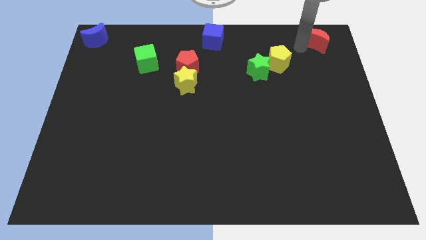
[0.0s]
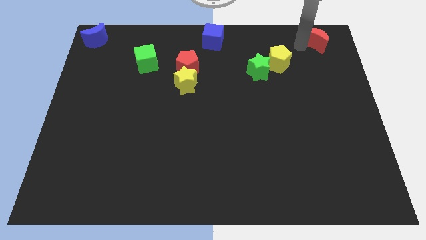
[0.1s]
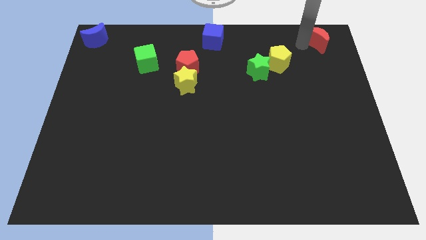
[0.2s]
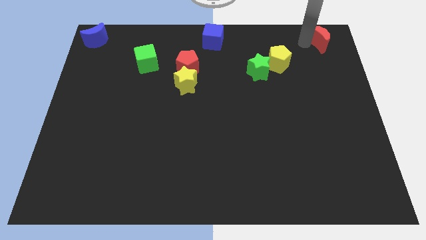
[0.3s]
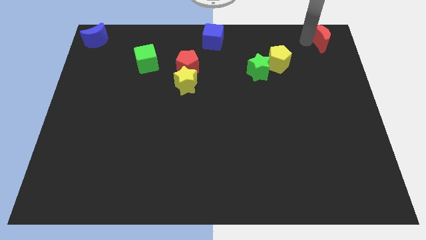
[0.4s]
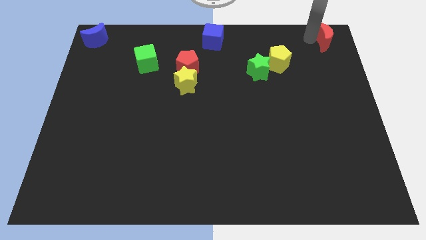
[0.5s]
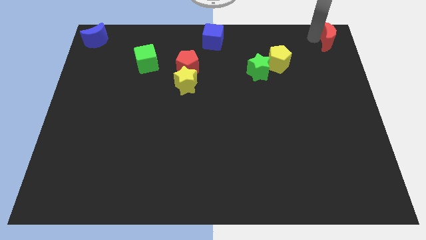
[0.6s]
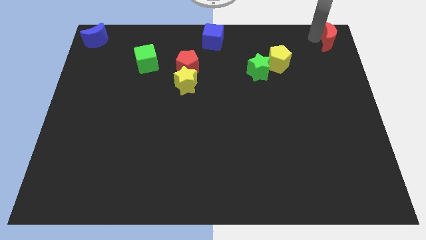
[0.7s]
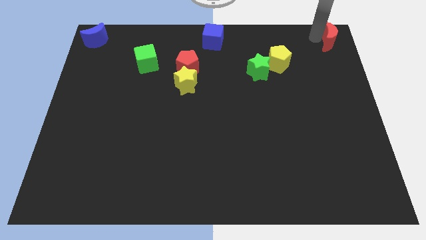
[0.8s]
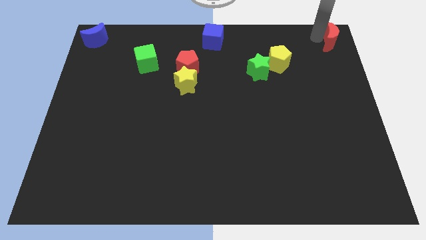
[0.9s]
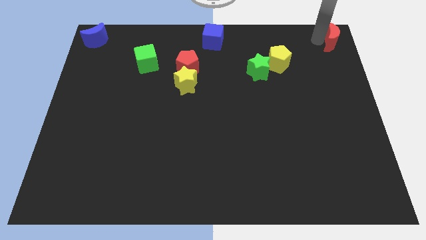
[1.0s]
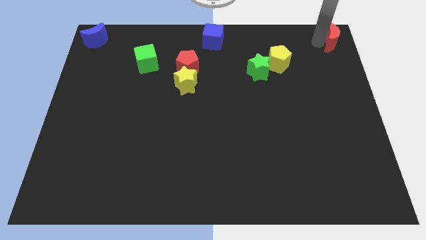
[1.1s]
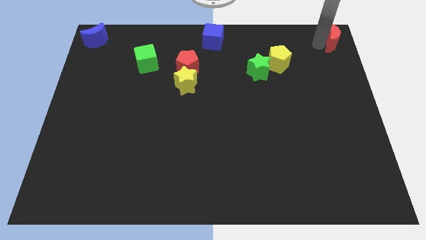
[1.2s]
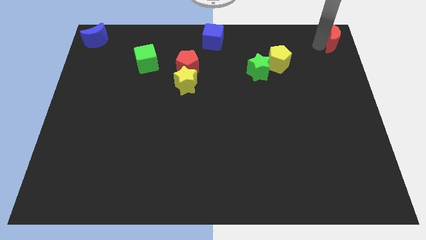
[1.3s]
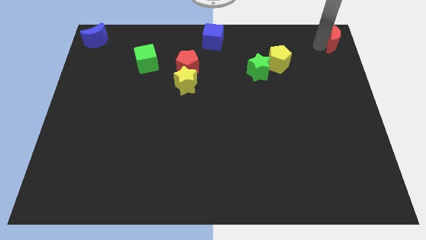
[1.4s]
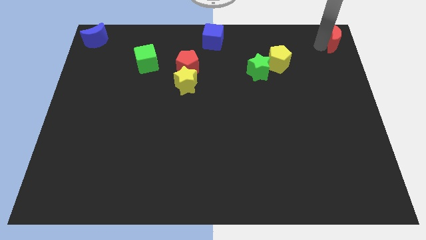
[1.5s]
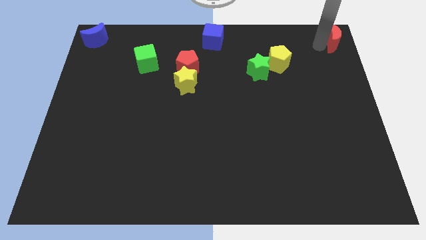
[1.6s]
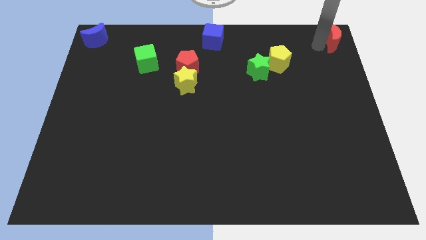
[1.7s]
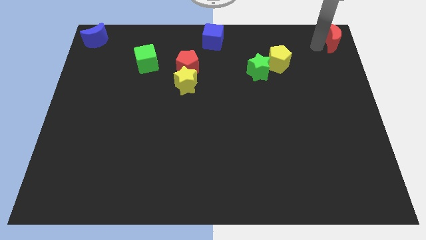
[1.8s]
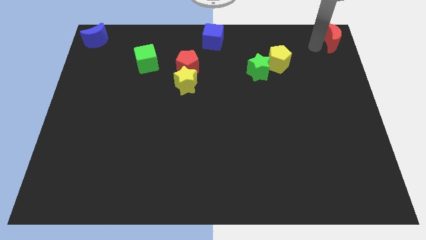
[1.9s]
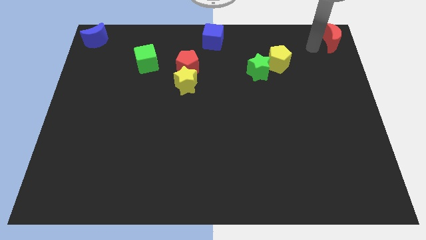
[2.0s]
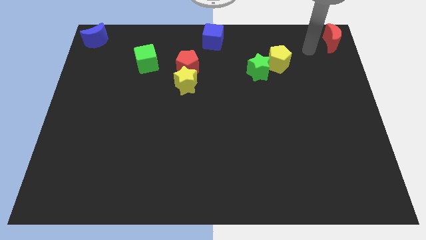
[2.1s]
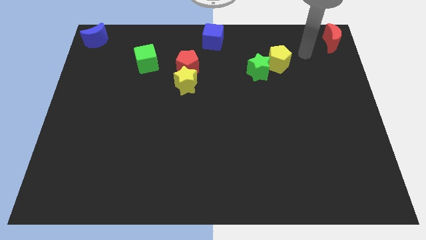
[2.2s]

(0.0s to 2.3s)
slide the red moon to the top right corner of the board

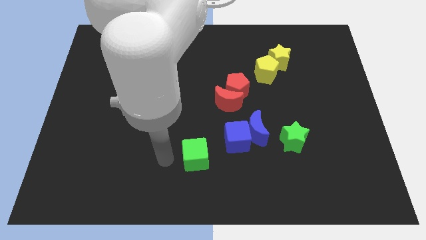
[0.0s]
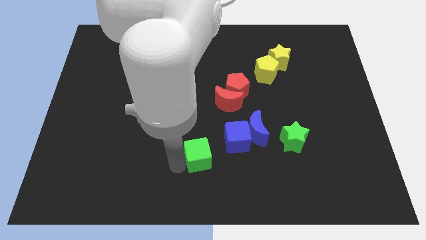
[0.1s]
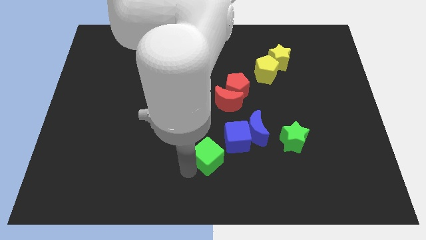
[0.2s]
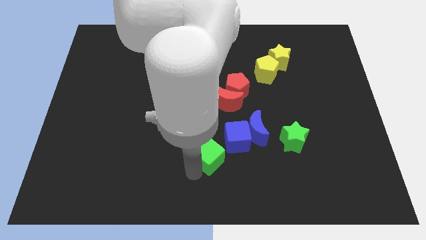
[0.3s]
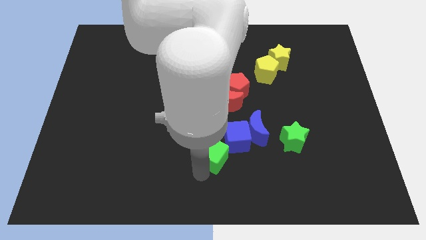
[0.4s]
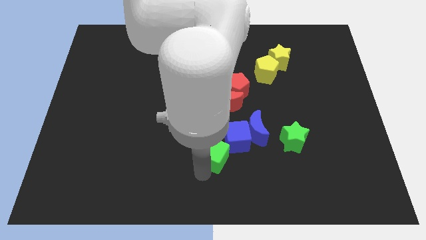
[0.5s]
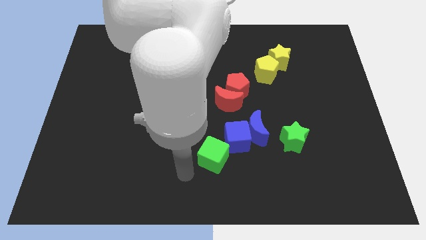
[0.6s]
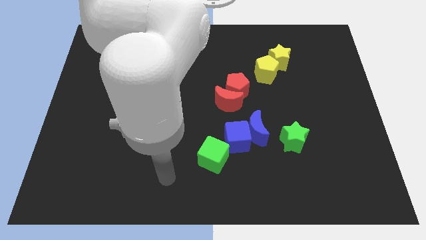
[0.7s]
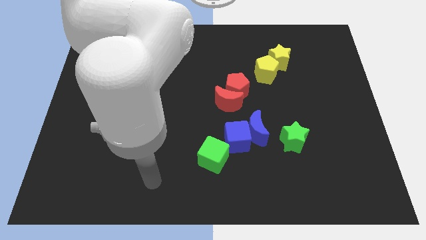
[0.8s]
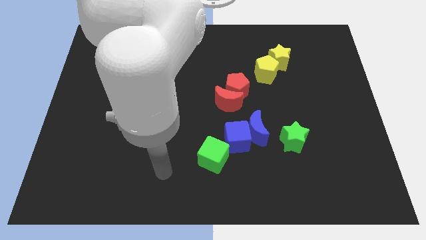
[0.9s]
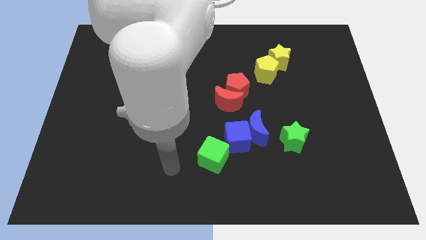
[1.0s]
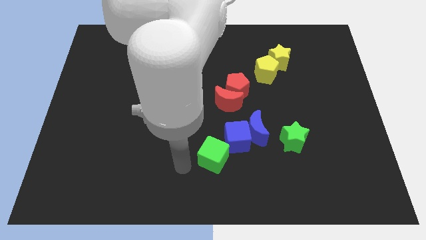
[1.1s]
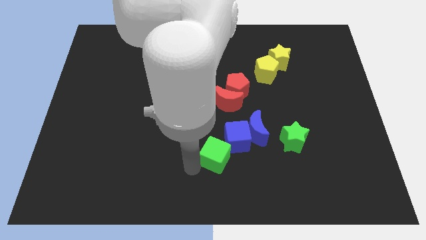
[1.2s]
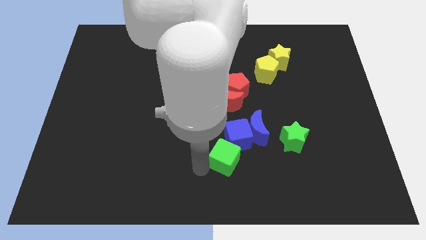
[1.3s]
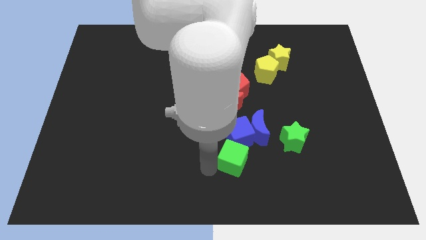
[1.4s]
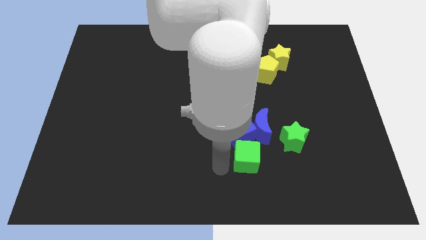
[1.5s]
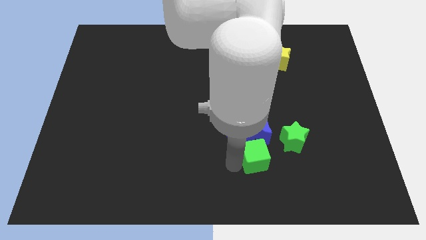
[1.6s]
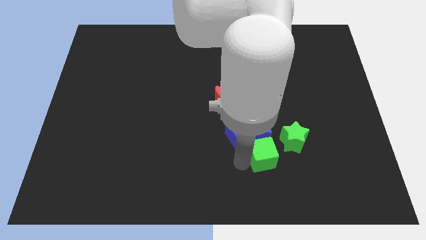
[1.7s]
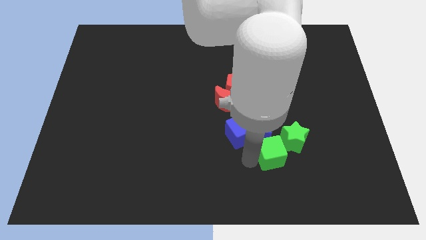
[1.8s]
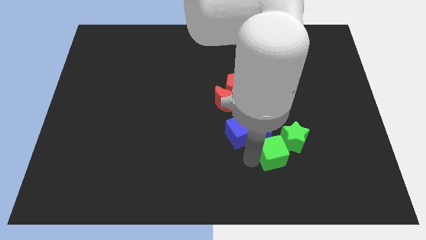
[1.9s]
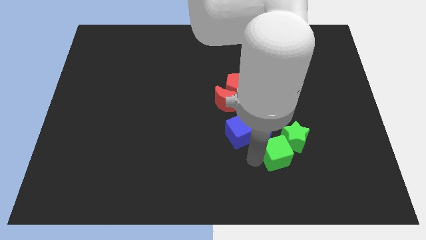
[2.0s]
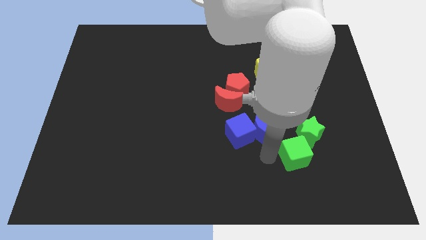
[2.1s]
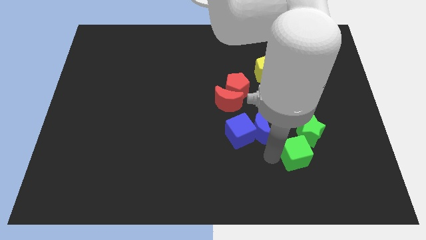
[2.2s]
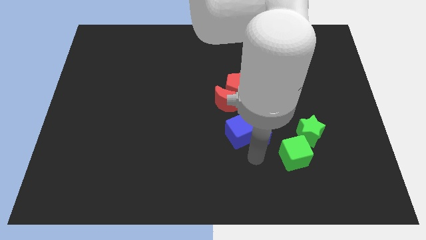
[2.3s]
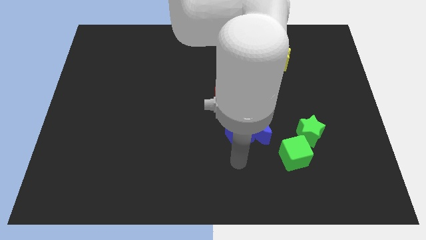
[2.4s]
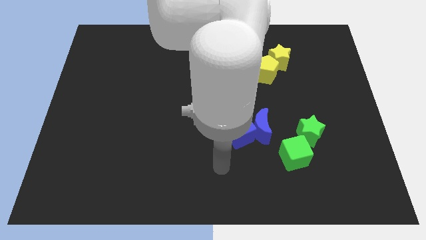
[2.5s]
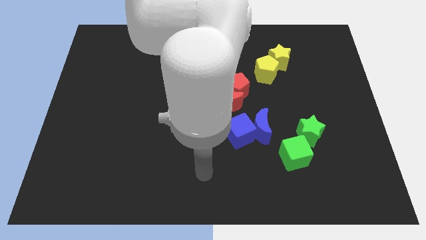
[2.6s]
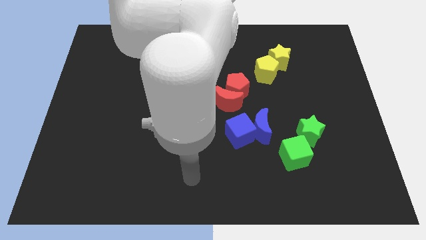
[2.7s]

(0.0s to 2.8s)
push the green cube to the bottom of the green star

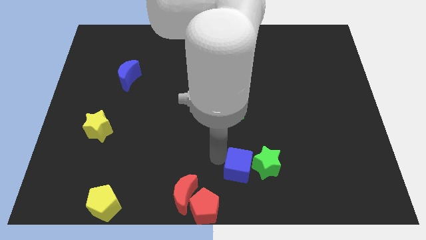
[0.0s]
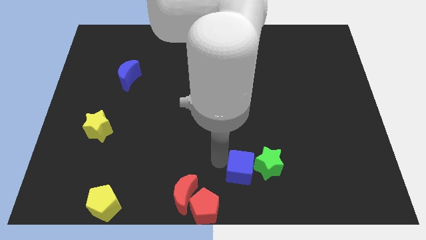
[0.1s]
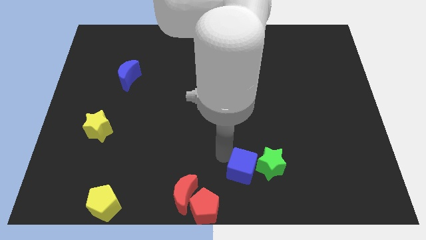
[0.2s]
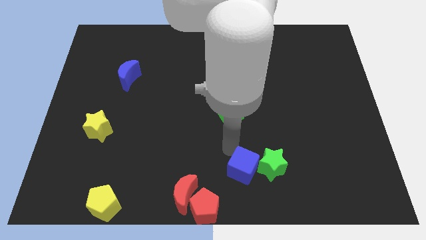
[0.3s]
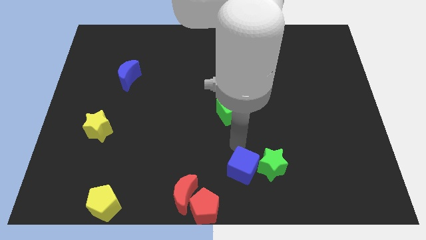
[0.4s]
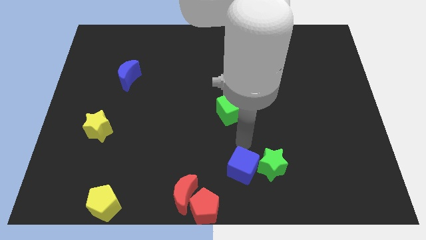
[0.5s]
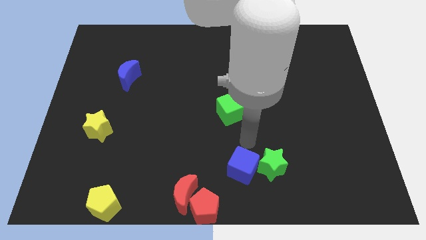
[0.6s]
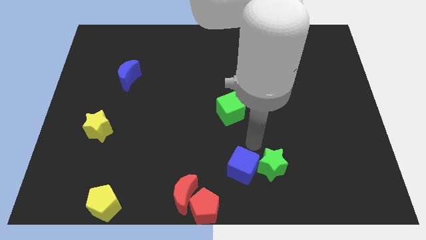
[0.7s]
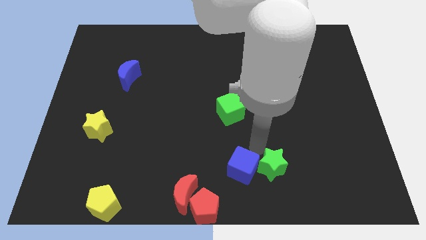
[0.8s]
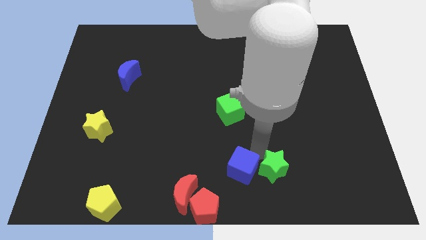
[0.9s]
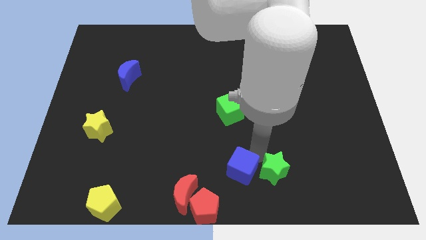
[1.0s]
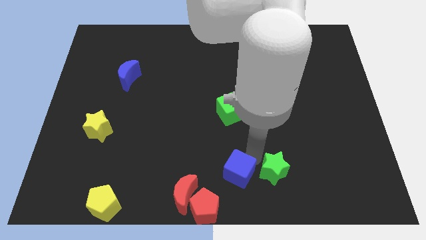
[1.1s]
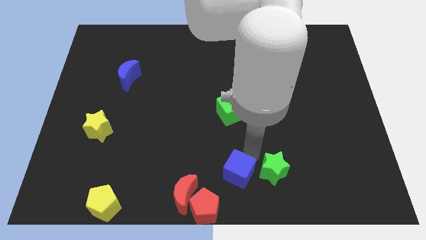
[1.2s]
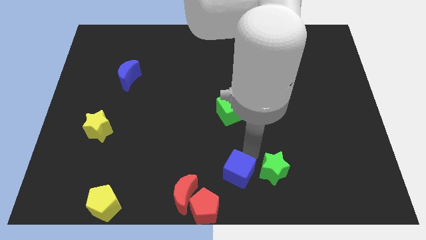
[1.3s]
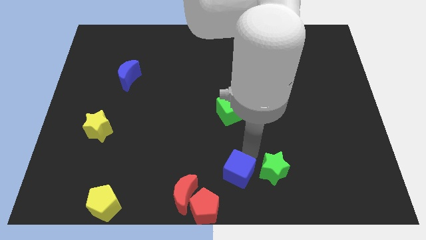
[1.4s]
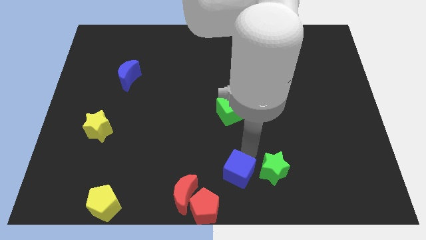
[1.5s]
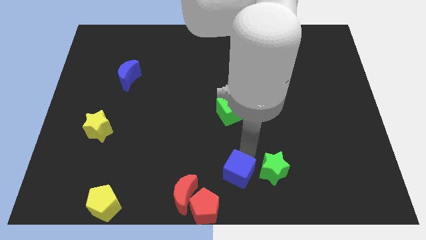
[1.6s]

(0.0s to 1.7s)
separate the blue cube from the green star

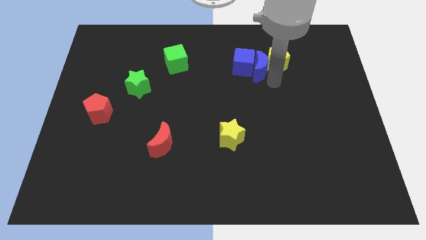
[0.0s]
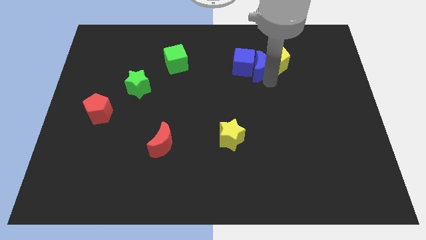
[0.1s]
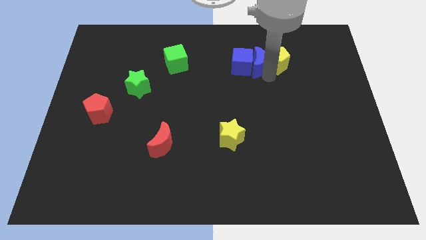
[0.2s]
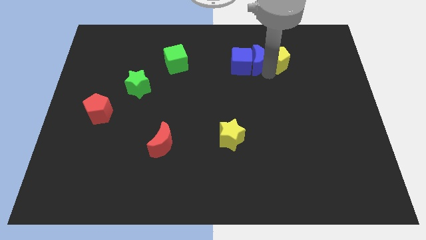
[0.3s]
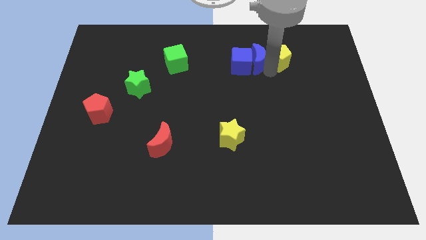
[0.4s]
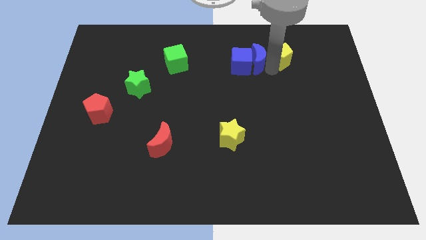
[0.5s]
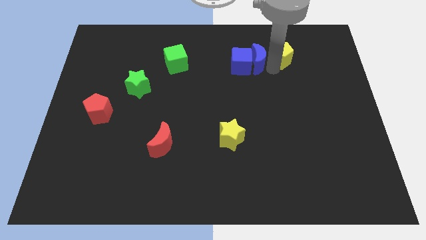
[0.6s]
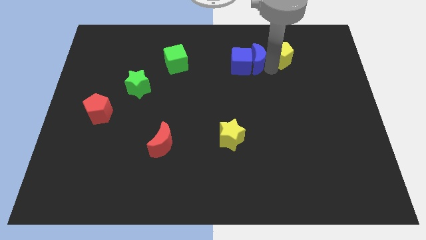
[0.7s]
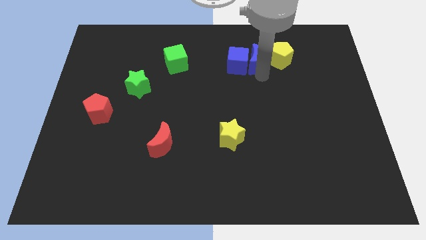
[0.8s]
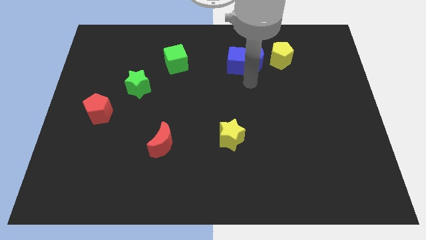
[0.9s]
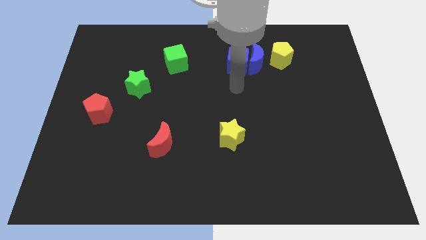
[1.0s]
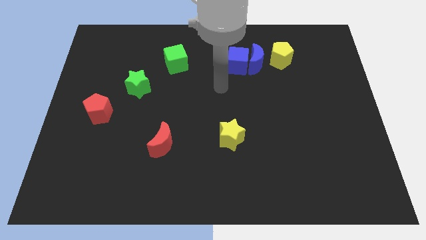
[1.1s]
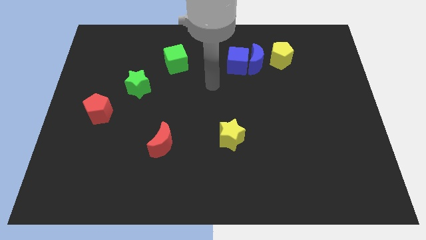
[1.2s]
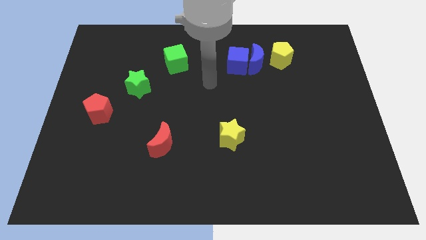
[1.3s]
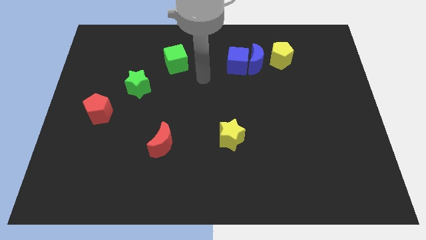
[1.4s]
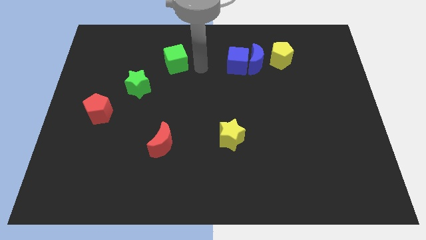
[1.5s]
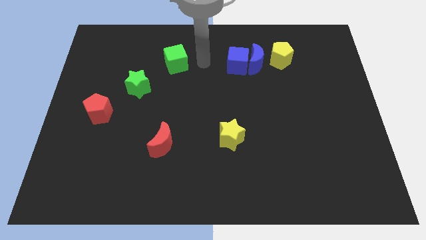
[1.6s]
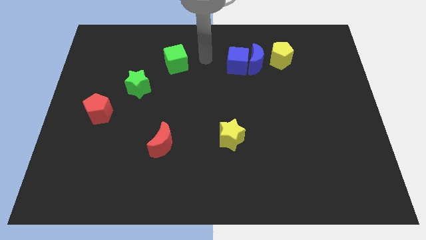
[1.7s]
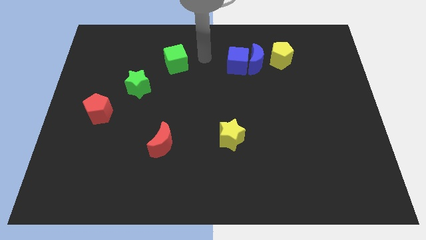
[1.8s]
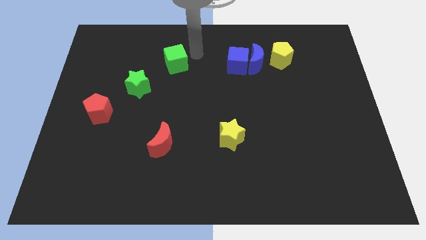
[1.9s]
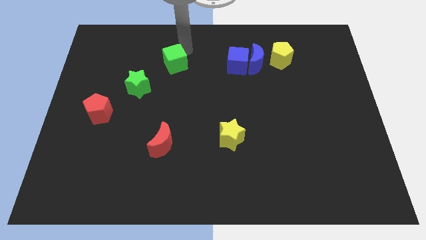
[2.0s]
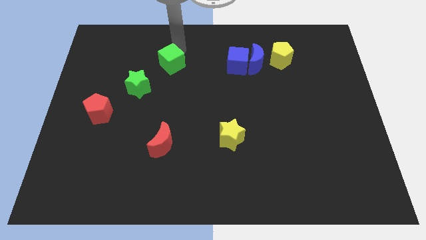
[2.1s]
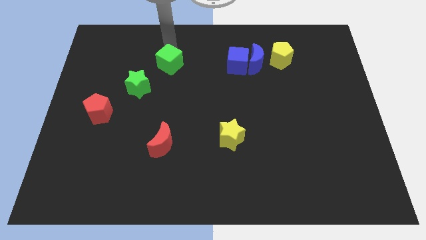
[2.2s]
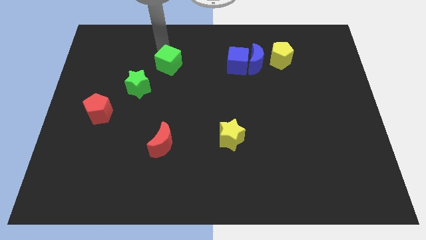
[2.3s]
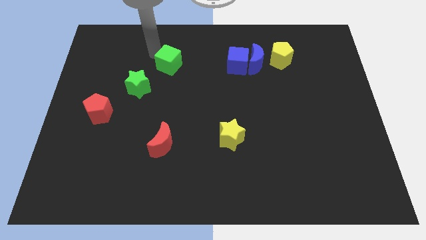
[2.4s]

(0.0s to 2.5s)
place the green cube diagonally to the green star
